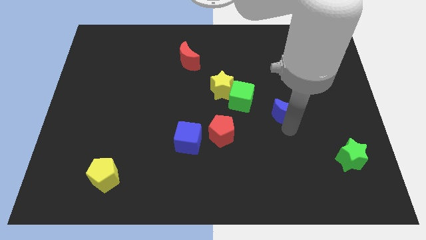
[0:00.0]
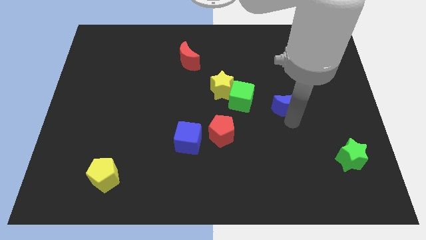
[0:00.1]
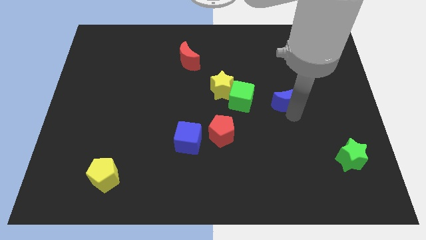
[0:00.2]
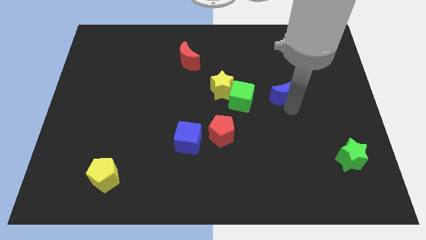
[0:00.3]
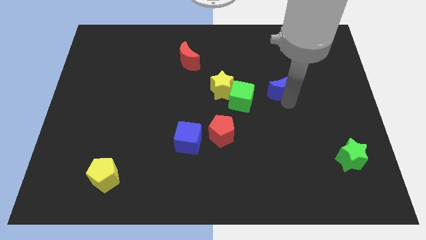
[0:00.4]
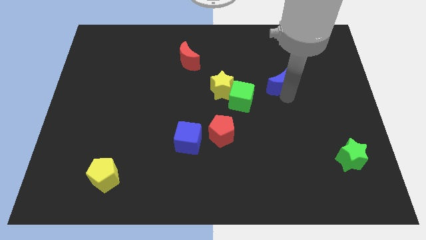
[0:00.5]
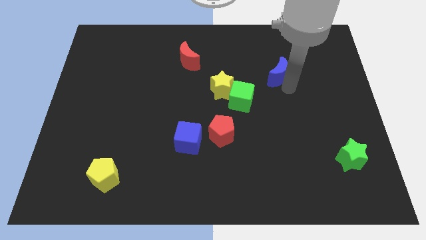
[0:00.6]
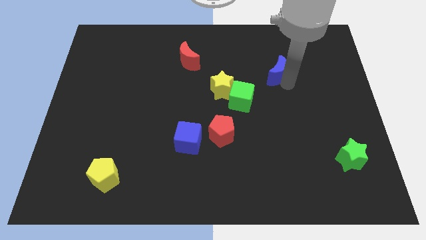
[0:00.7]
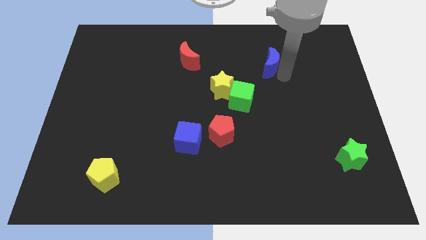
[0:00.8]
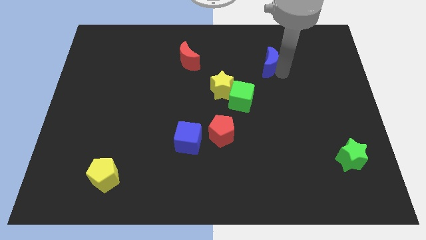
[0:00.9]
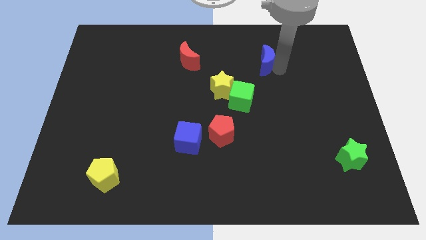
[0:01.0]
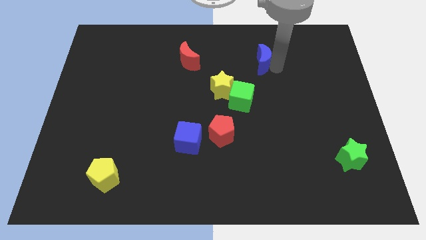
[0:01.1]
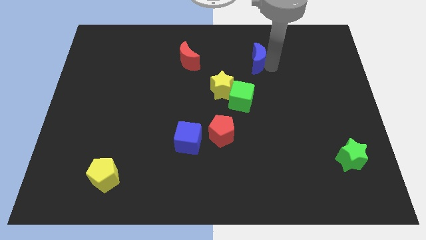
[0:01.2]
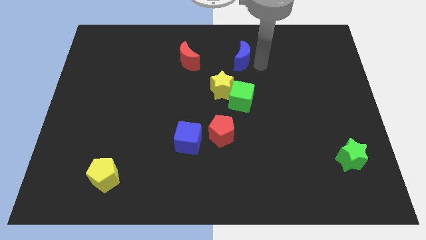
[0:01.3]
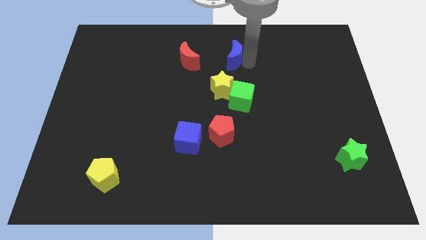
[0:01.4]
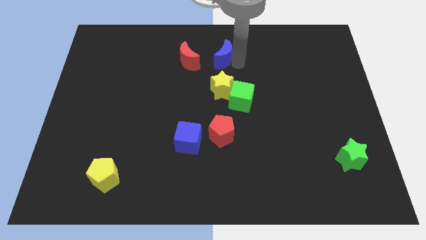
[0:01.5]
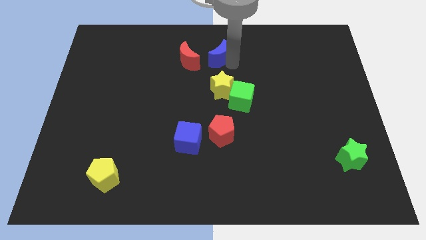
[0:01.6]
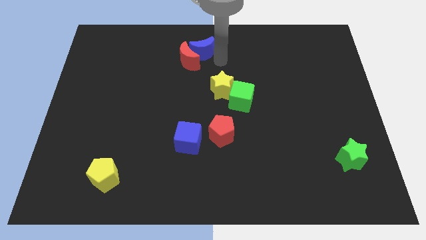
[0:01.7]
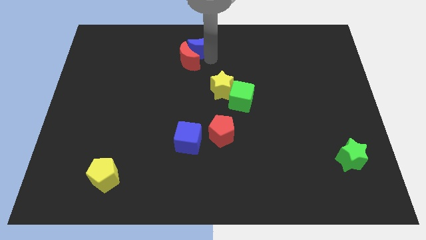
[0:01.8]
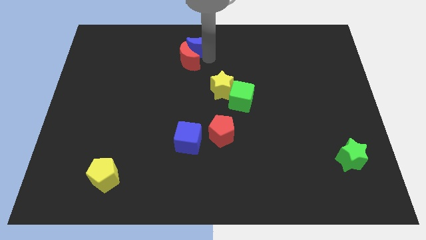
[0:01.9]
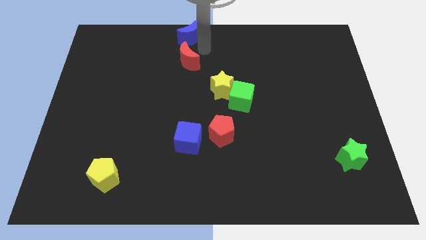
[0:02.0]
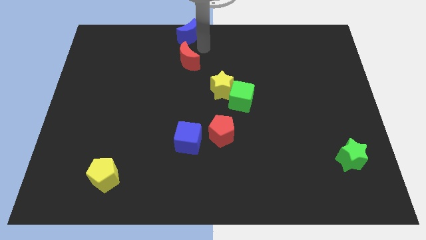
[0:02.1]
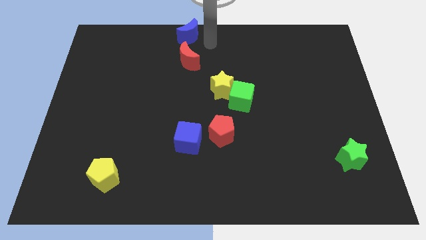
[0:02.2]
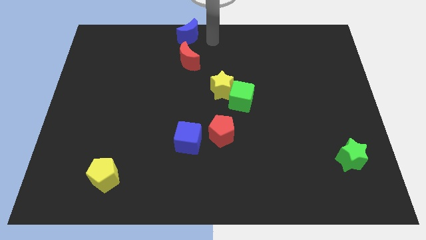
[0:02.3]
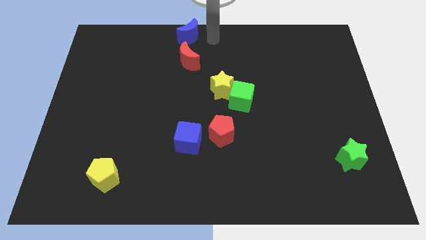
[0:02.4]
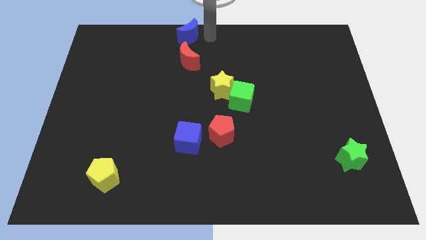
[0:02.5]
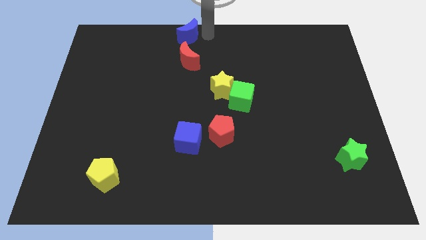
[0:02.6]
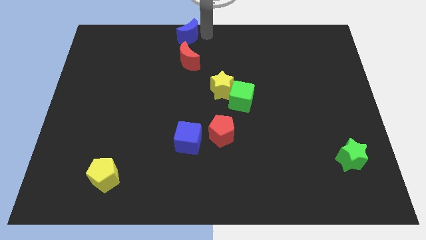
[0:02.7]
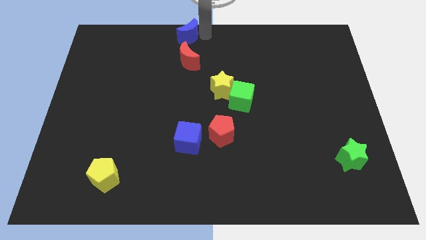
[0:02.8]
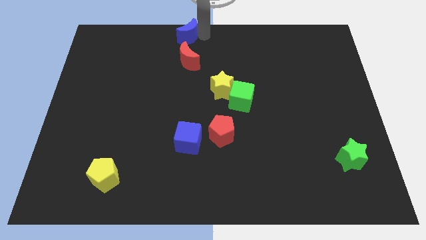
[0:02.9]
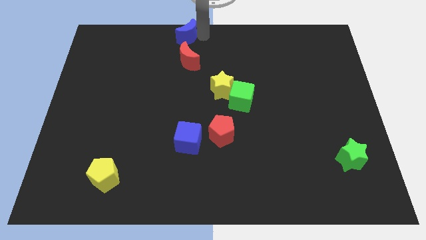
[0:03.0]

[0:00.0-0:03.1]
push the blue moon to the top center

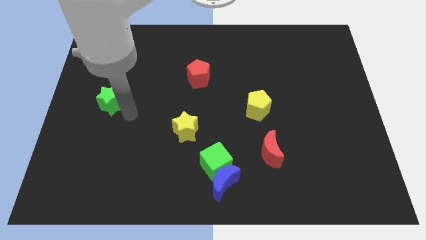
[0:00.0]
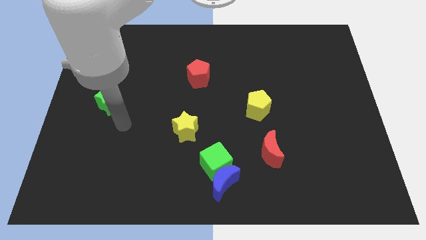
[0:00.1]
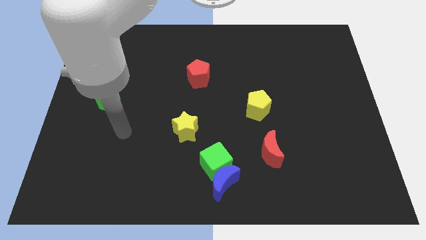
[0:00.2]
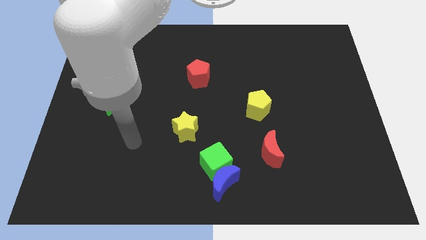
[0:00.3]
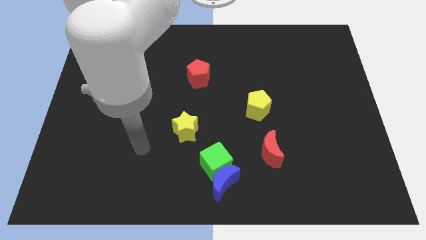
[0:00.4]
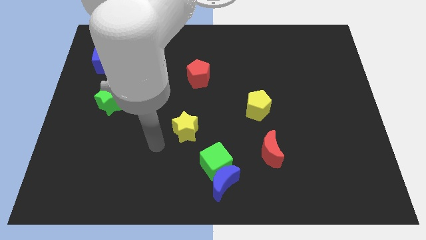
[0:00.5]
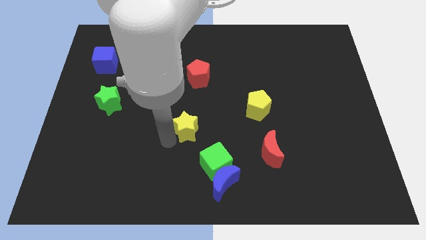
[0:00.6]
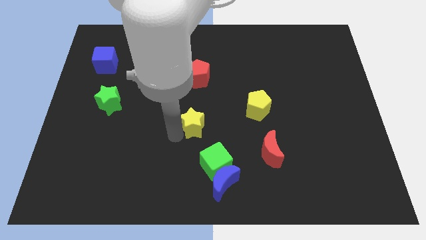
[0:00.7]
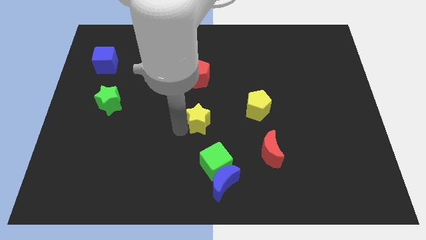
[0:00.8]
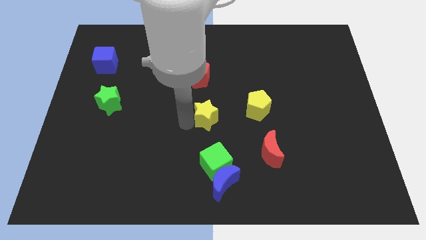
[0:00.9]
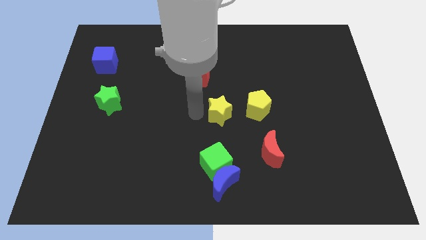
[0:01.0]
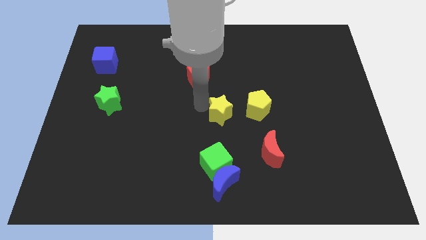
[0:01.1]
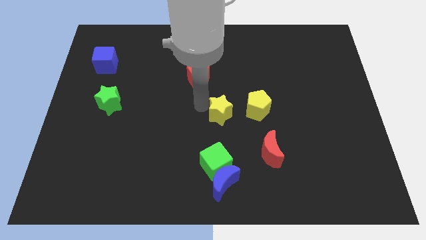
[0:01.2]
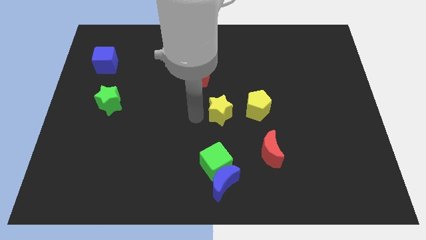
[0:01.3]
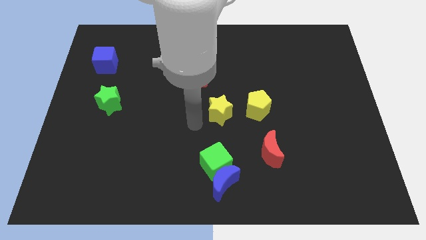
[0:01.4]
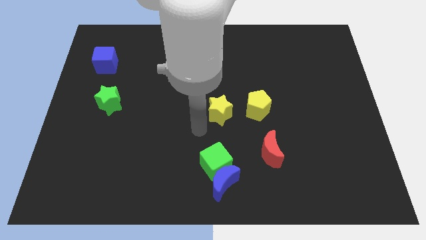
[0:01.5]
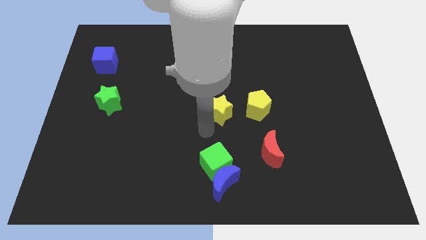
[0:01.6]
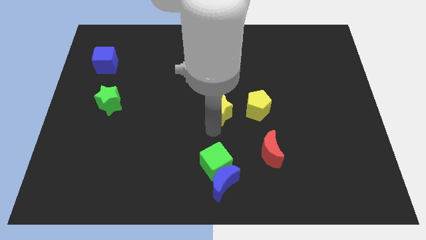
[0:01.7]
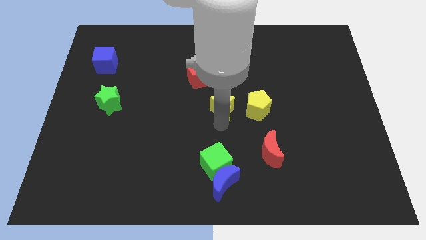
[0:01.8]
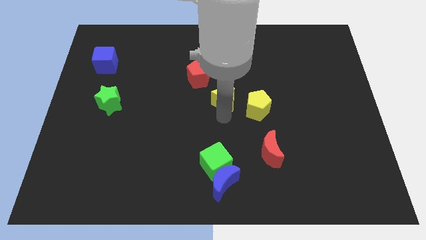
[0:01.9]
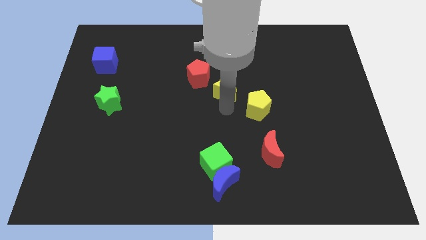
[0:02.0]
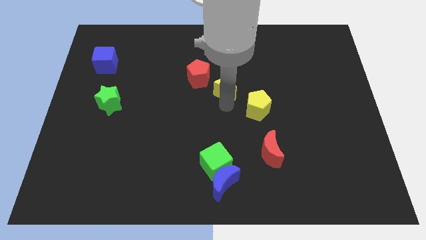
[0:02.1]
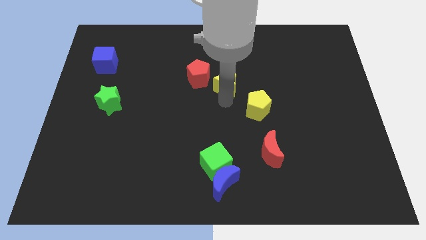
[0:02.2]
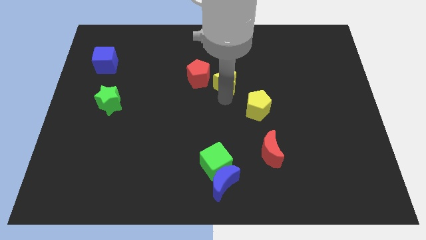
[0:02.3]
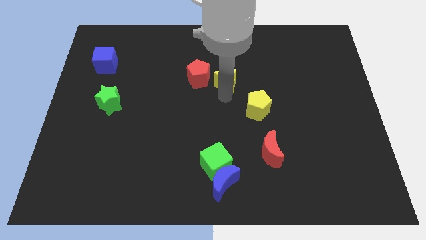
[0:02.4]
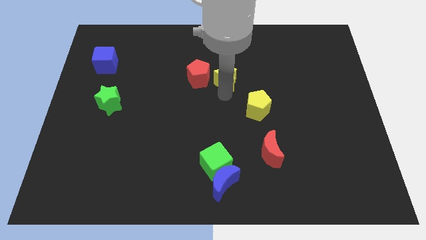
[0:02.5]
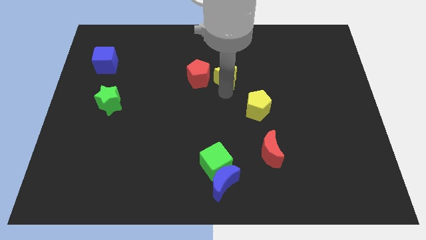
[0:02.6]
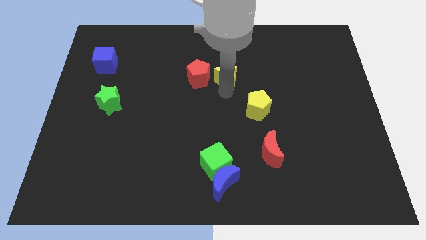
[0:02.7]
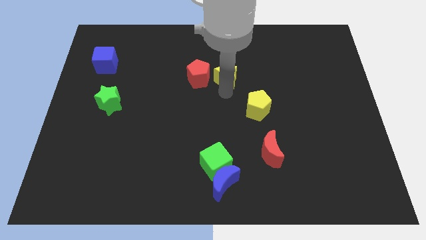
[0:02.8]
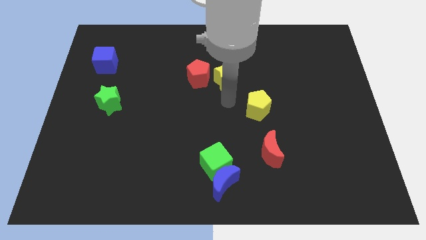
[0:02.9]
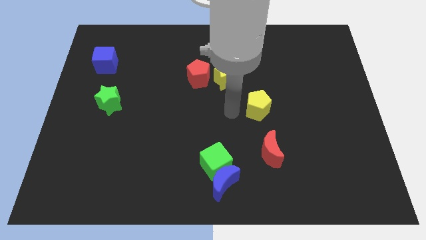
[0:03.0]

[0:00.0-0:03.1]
place yellow star on right to red pentagon

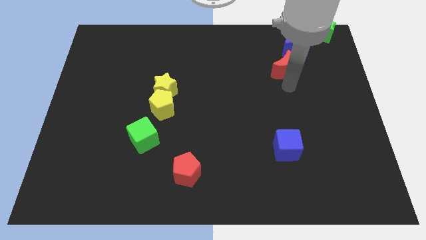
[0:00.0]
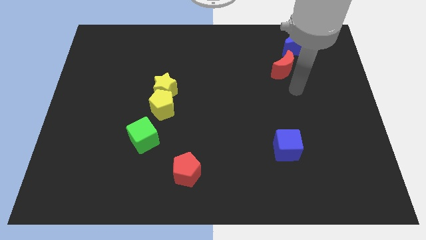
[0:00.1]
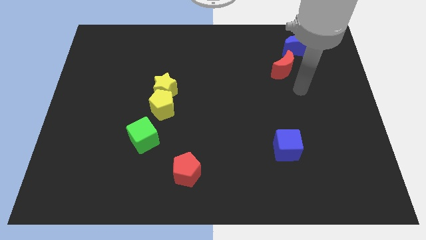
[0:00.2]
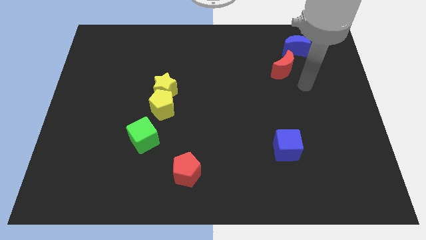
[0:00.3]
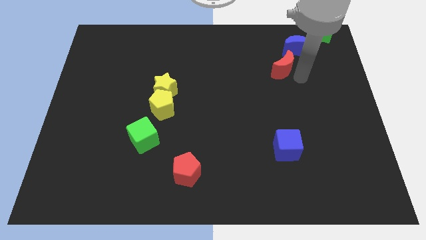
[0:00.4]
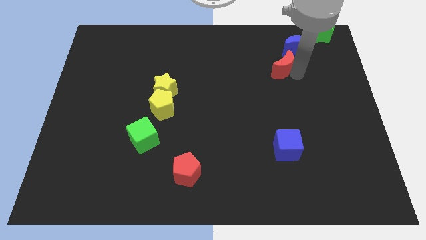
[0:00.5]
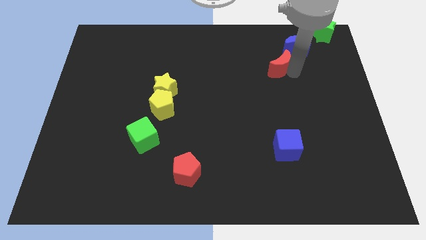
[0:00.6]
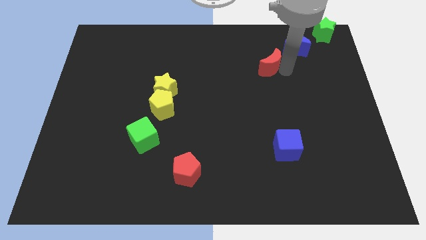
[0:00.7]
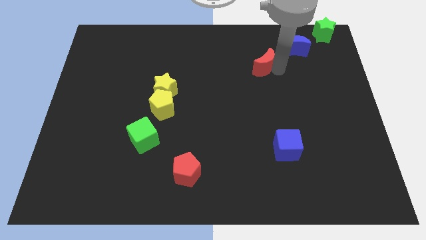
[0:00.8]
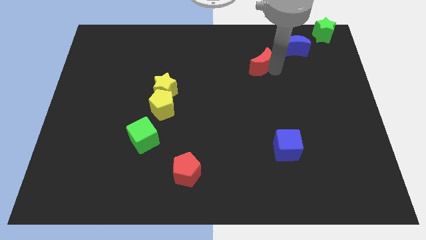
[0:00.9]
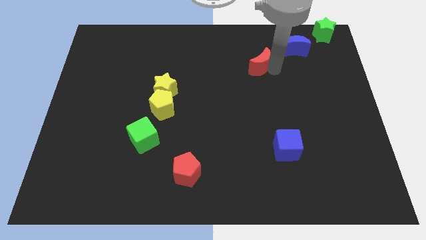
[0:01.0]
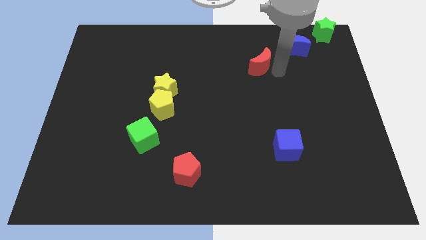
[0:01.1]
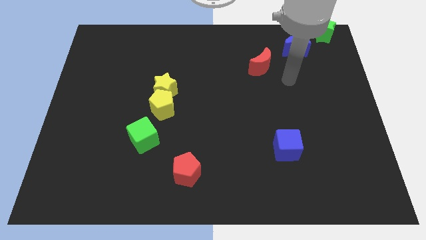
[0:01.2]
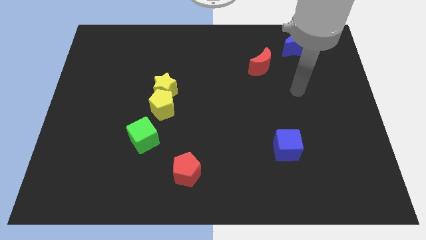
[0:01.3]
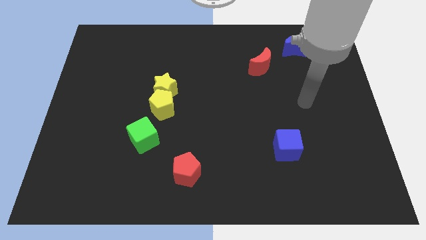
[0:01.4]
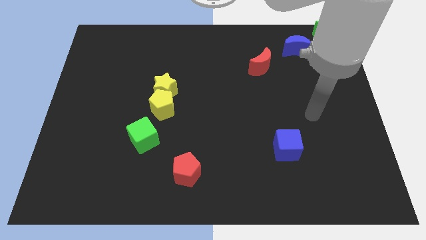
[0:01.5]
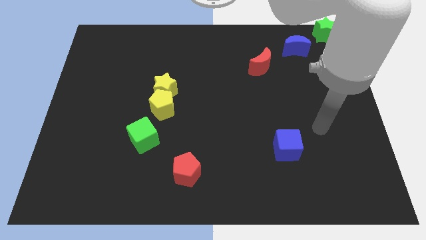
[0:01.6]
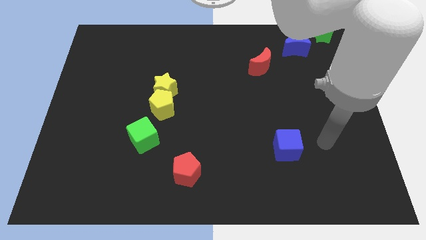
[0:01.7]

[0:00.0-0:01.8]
slightly push the red moon towards the center

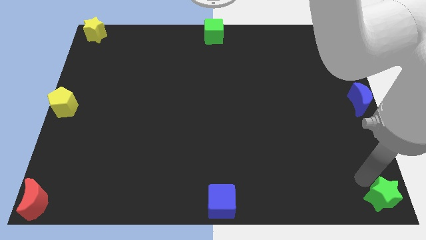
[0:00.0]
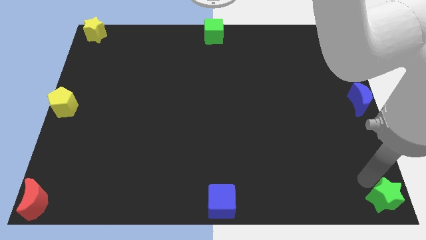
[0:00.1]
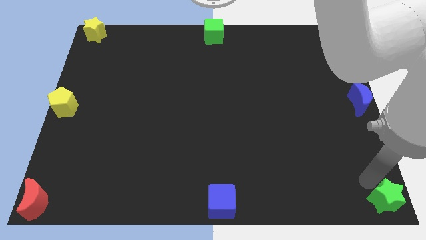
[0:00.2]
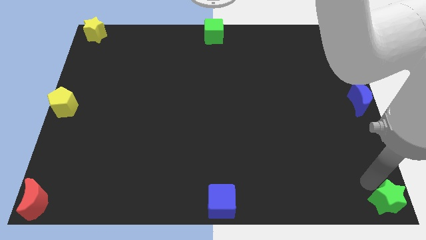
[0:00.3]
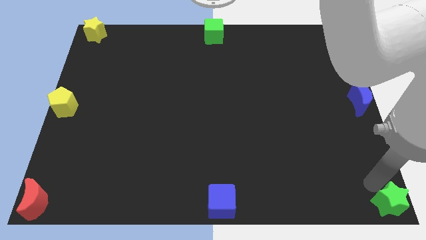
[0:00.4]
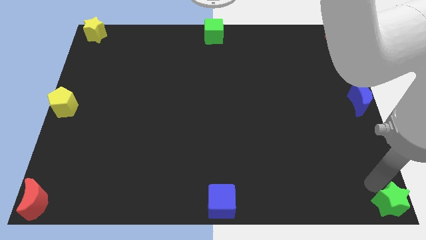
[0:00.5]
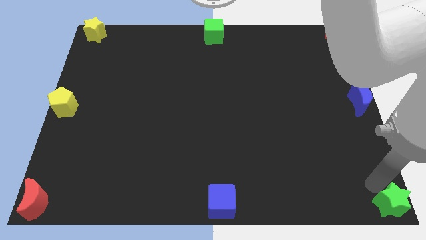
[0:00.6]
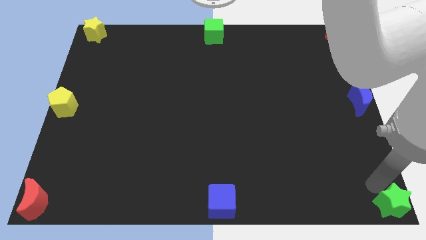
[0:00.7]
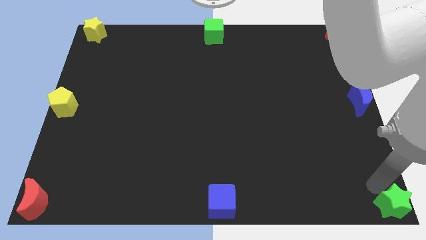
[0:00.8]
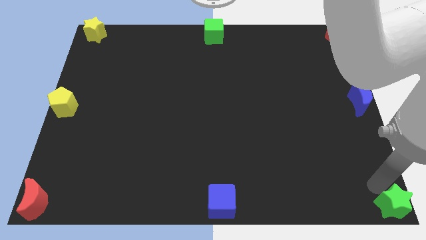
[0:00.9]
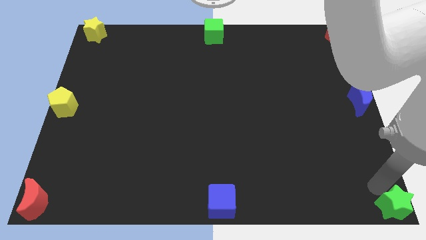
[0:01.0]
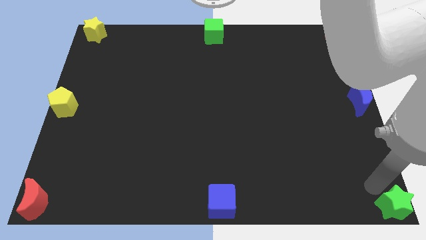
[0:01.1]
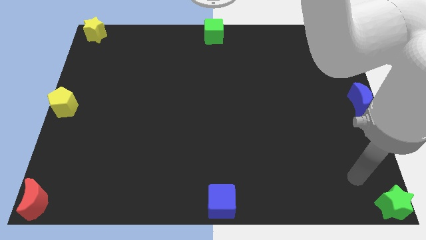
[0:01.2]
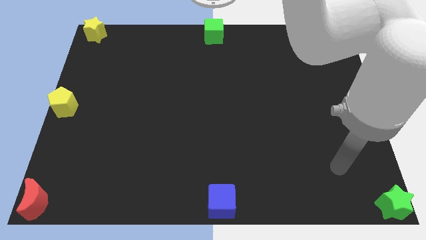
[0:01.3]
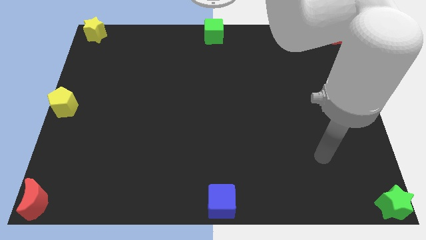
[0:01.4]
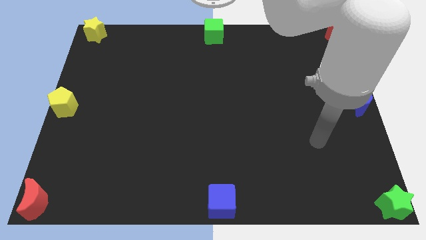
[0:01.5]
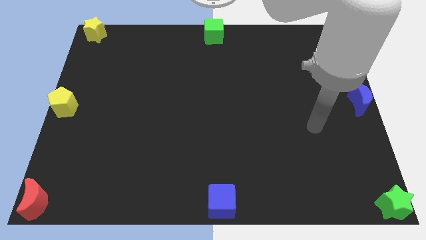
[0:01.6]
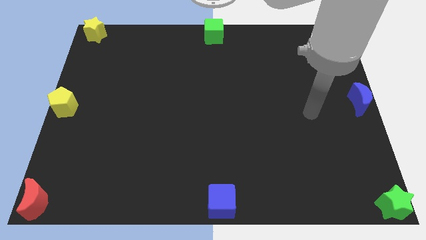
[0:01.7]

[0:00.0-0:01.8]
push the green star to the bottom right corner of the board
